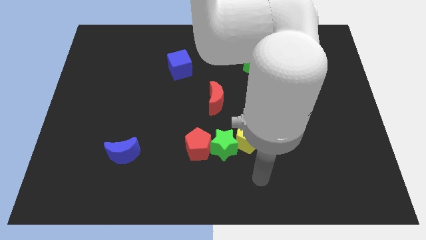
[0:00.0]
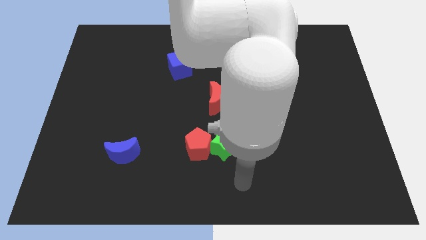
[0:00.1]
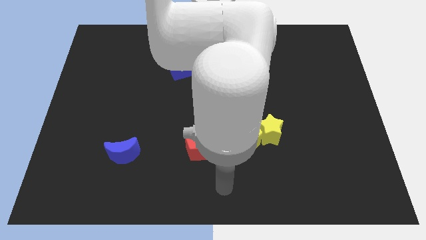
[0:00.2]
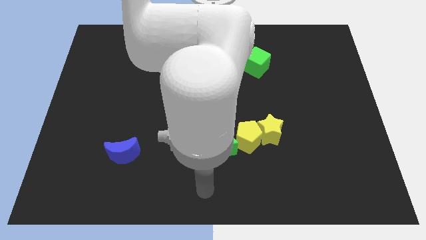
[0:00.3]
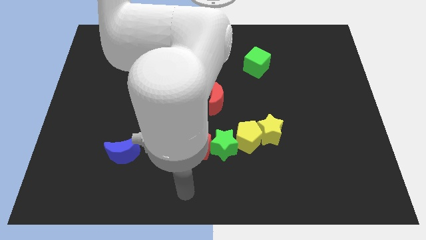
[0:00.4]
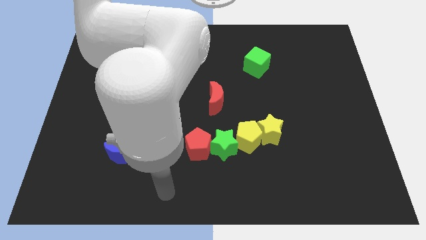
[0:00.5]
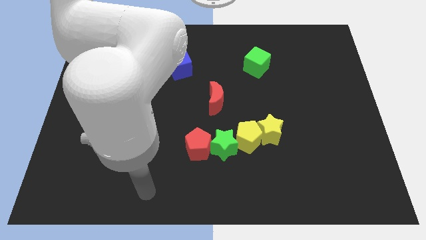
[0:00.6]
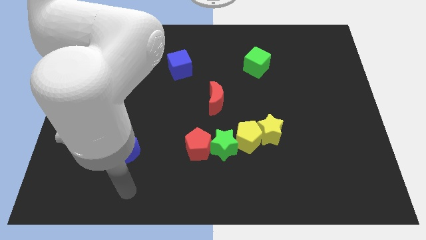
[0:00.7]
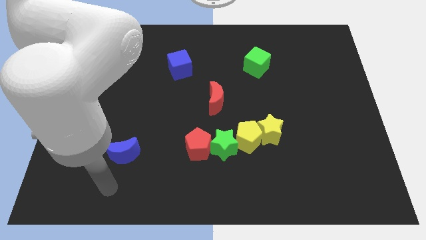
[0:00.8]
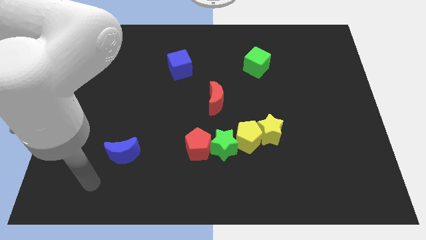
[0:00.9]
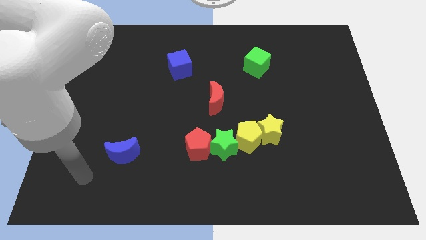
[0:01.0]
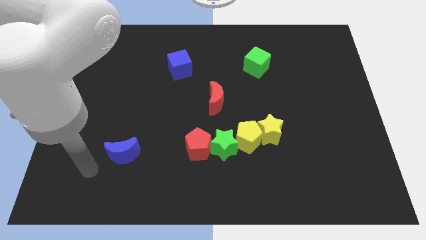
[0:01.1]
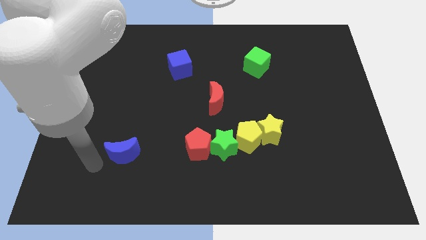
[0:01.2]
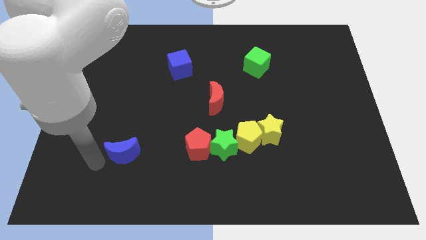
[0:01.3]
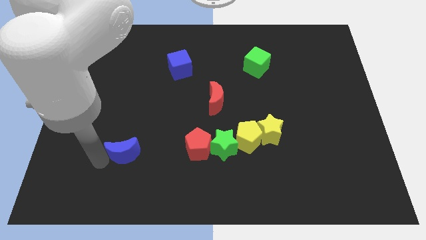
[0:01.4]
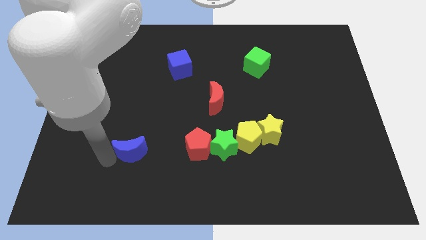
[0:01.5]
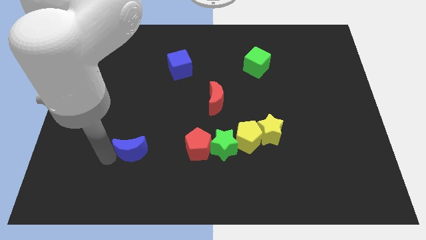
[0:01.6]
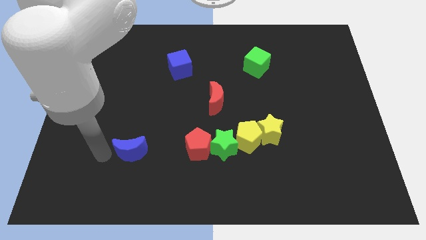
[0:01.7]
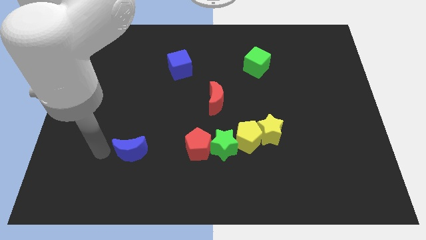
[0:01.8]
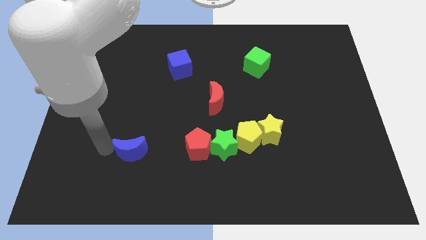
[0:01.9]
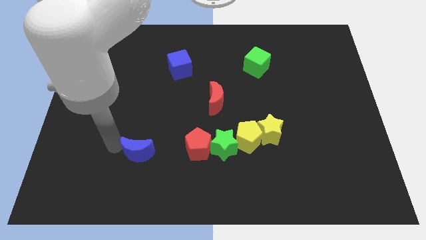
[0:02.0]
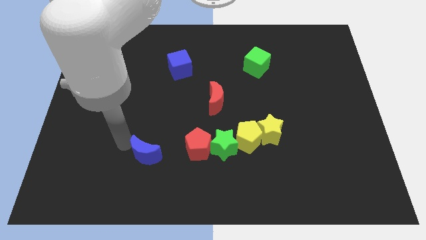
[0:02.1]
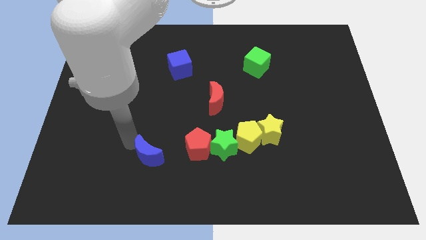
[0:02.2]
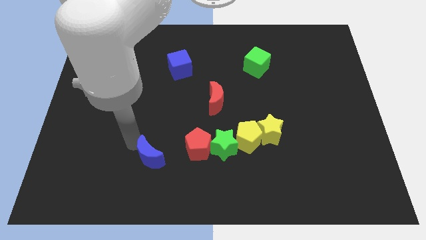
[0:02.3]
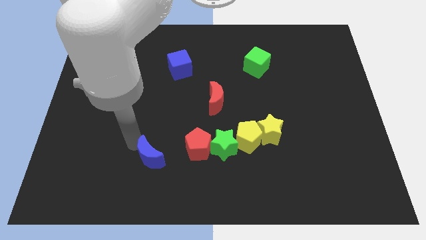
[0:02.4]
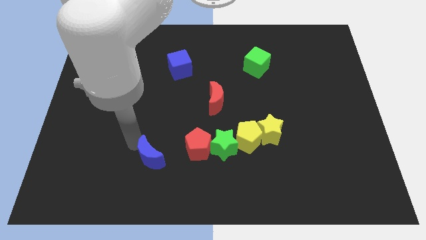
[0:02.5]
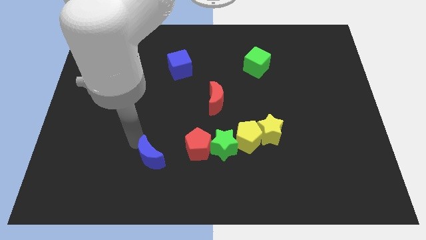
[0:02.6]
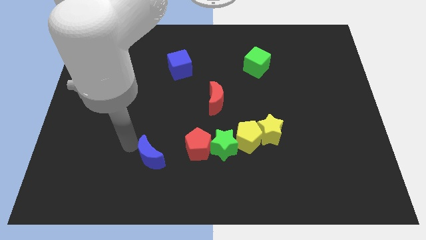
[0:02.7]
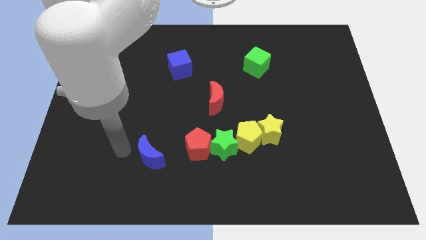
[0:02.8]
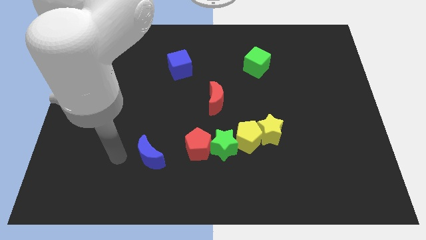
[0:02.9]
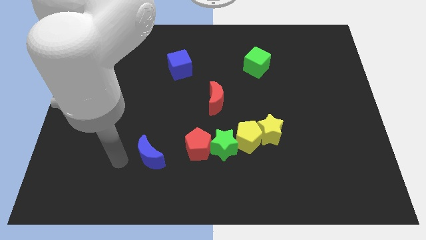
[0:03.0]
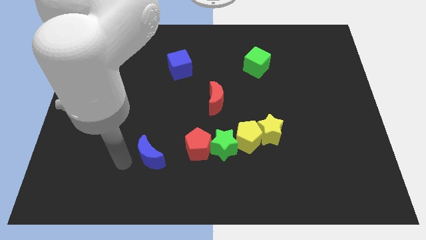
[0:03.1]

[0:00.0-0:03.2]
move blue crescent towards red pentagon

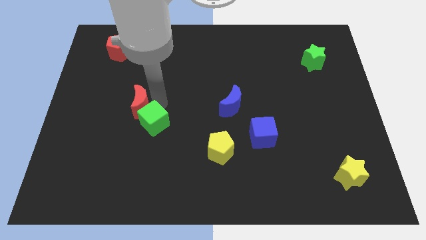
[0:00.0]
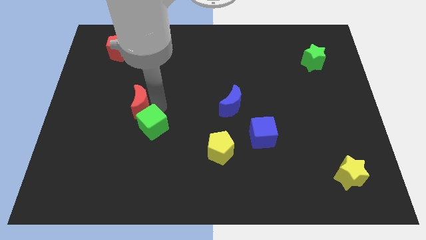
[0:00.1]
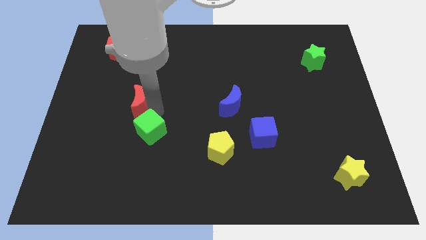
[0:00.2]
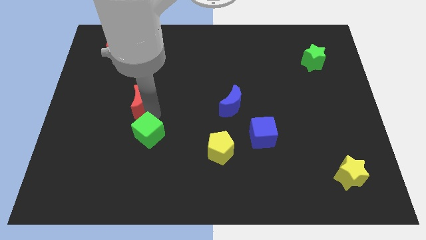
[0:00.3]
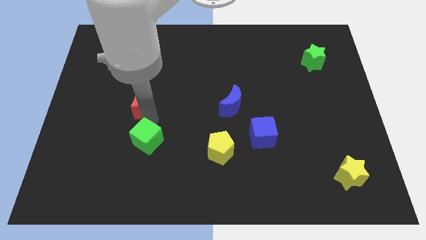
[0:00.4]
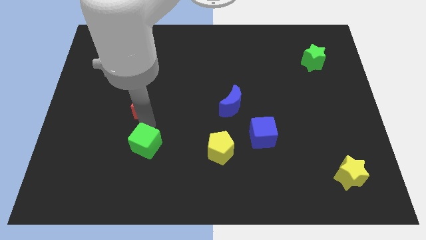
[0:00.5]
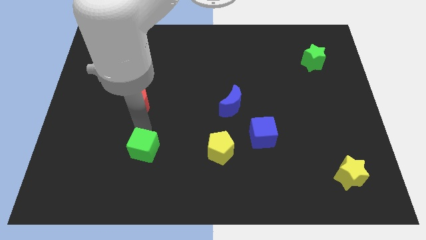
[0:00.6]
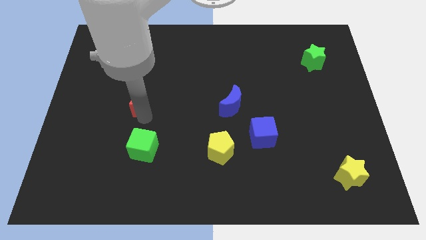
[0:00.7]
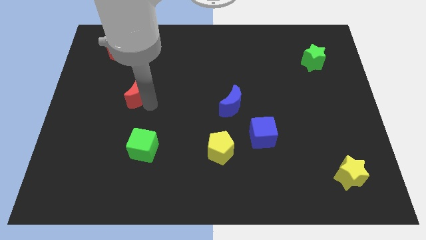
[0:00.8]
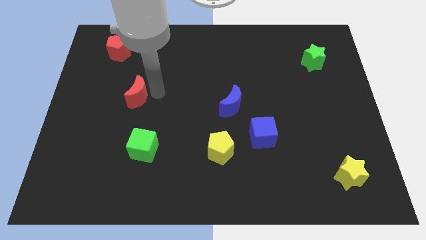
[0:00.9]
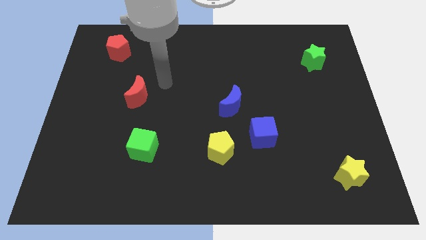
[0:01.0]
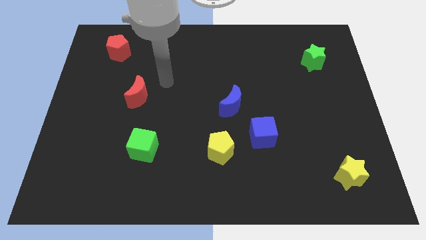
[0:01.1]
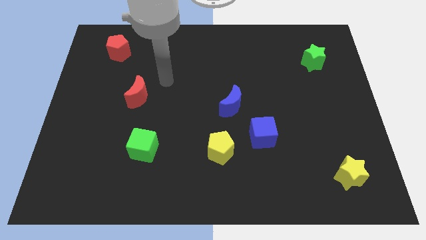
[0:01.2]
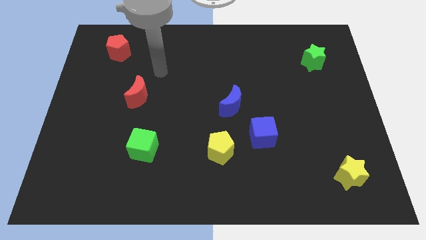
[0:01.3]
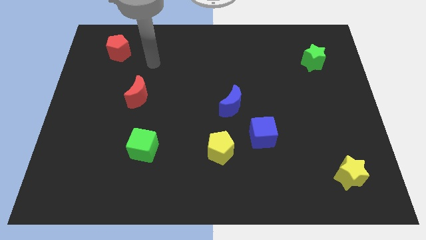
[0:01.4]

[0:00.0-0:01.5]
move the green cube parallel to the yellow pentagon

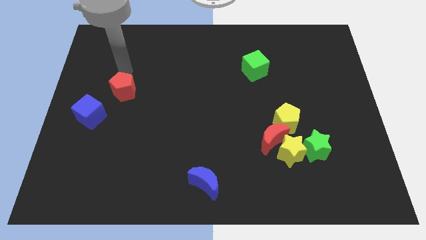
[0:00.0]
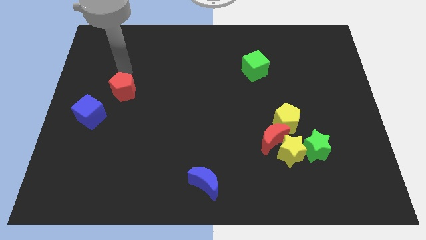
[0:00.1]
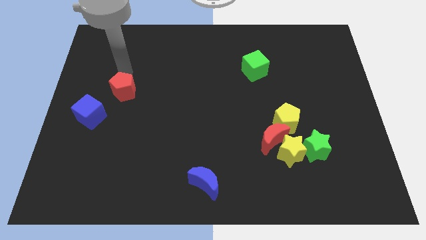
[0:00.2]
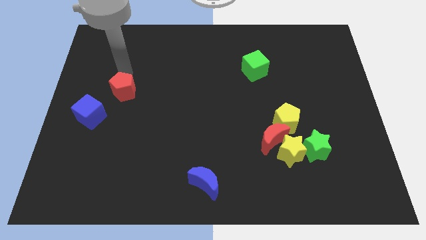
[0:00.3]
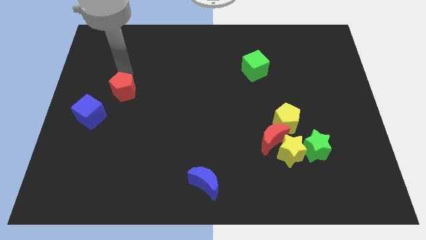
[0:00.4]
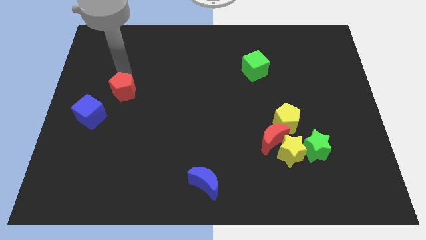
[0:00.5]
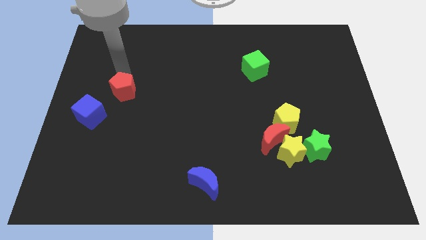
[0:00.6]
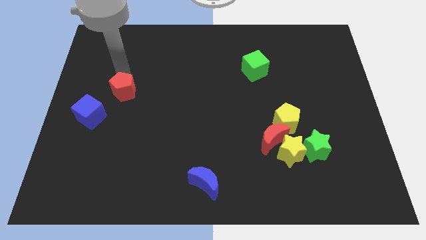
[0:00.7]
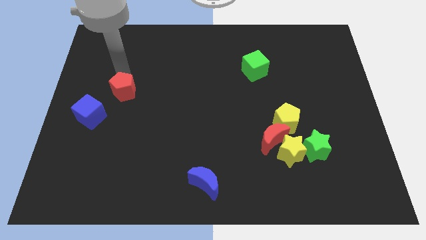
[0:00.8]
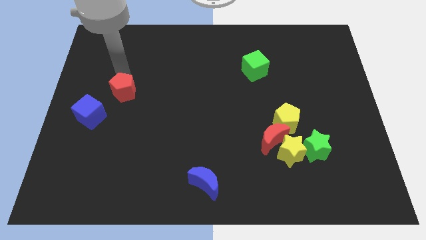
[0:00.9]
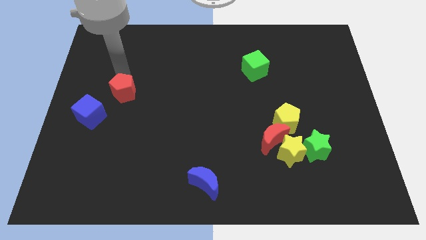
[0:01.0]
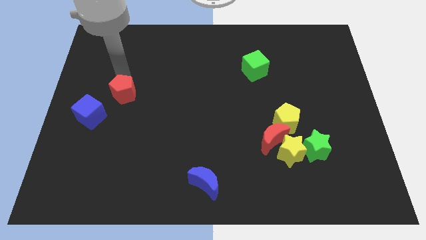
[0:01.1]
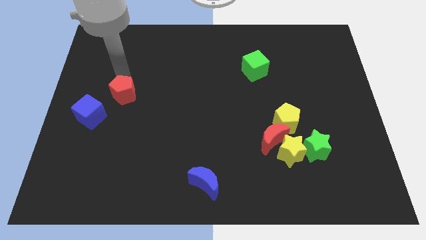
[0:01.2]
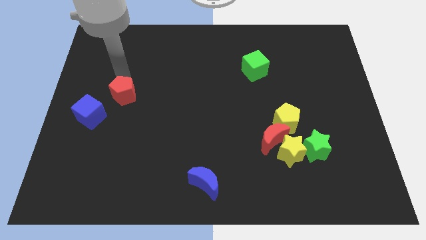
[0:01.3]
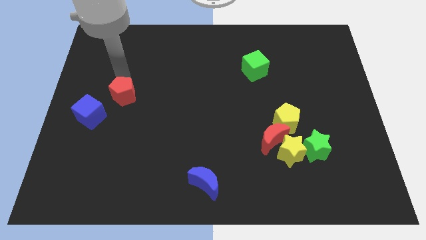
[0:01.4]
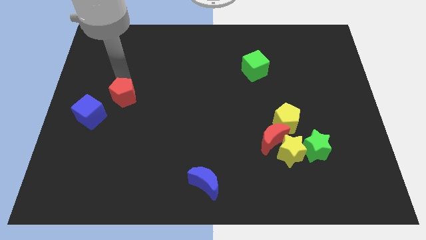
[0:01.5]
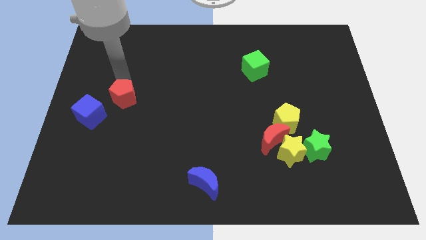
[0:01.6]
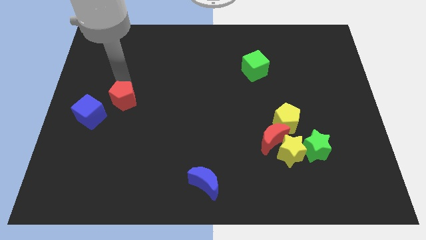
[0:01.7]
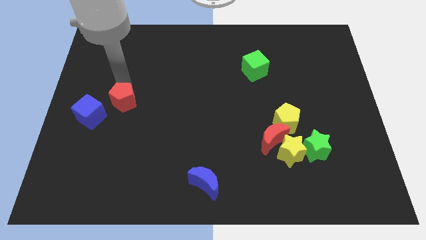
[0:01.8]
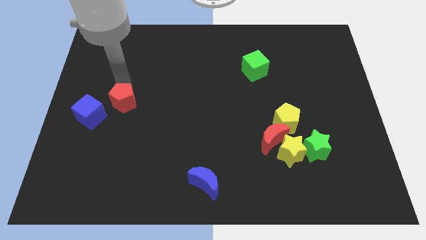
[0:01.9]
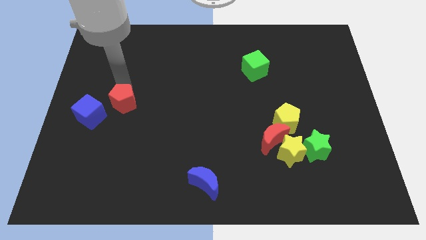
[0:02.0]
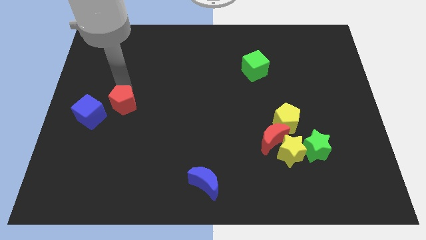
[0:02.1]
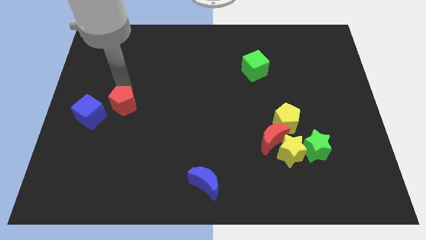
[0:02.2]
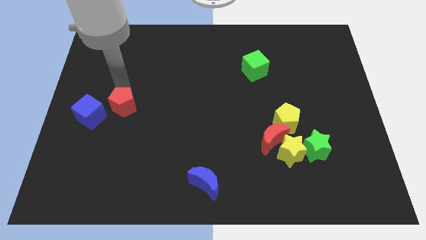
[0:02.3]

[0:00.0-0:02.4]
move your arm towards red pentagon

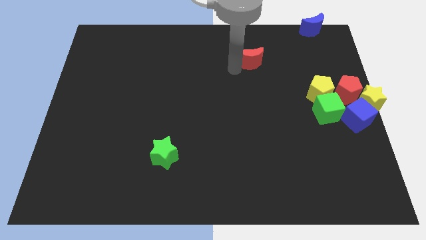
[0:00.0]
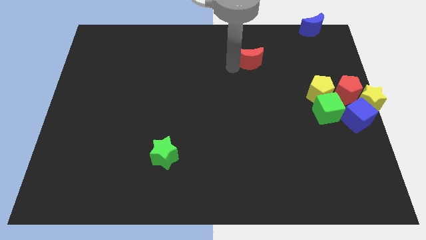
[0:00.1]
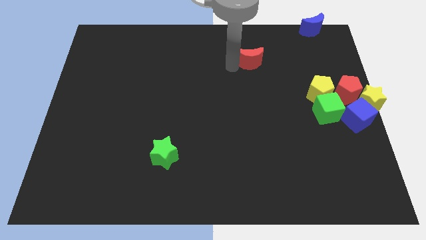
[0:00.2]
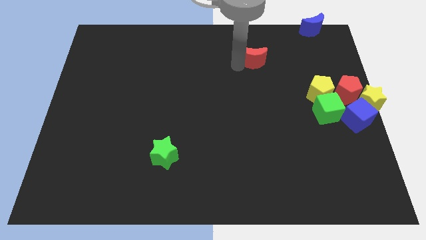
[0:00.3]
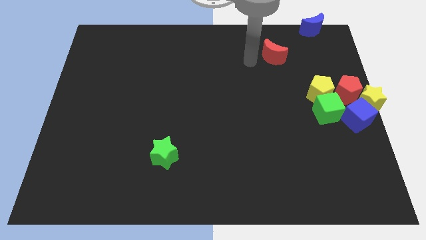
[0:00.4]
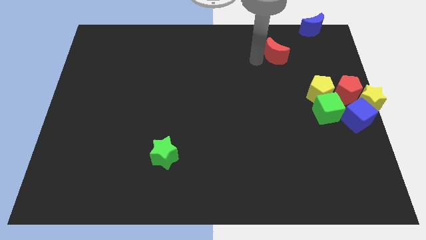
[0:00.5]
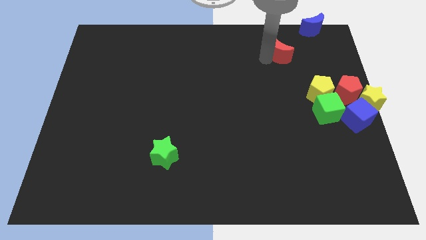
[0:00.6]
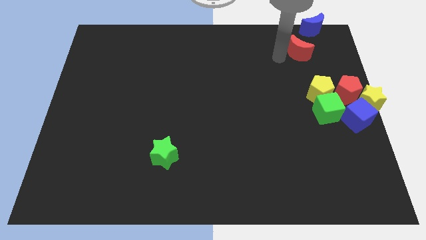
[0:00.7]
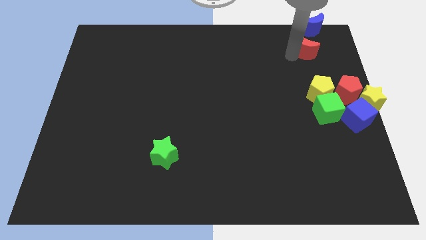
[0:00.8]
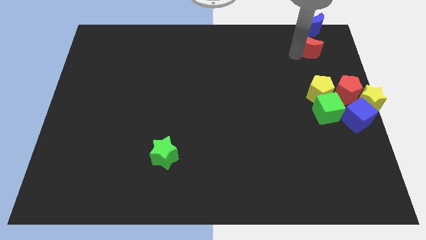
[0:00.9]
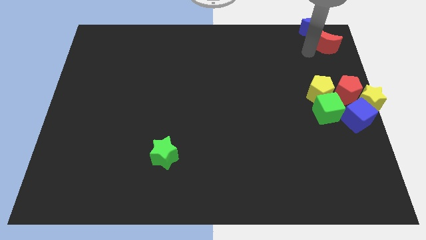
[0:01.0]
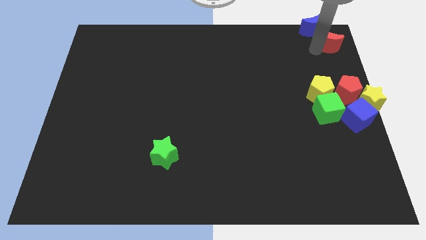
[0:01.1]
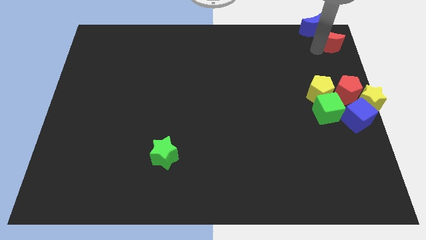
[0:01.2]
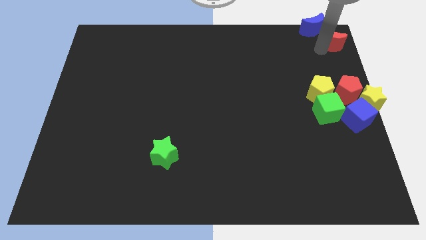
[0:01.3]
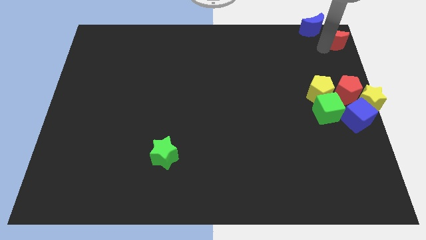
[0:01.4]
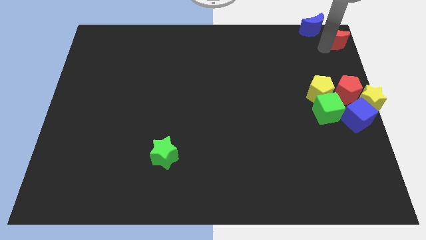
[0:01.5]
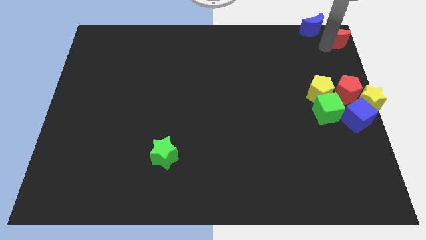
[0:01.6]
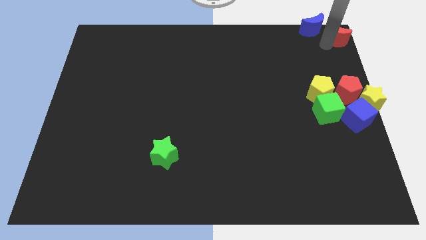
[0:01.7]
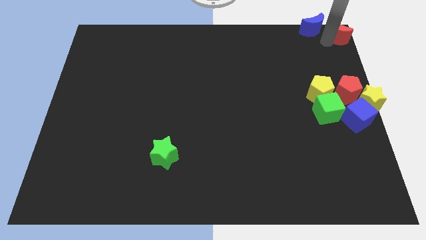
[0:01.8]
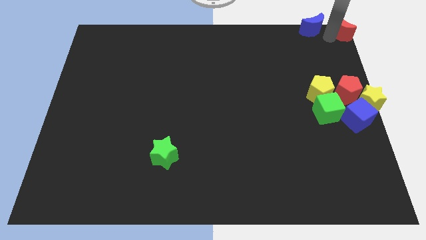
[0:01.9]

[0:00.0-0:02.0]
put the red moon at the top right corner
